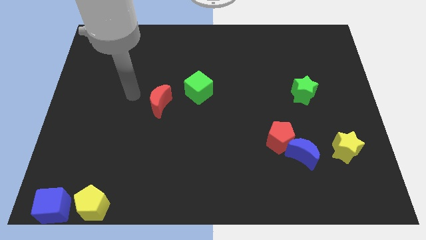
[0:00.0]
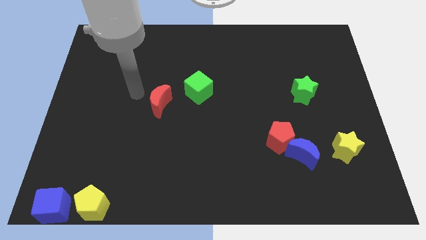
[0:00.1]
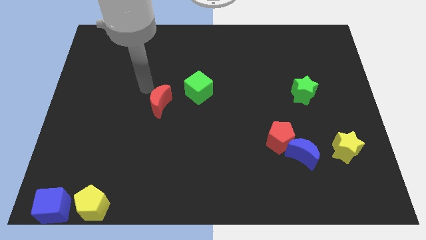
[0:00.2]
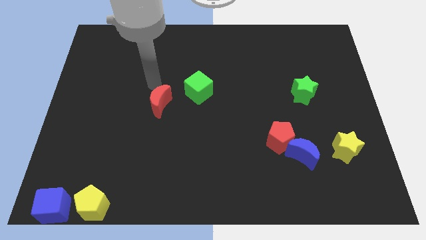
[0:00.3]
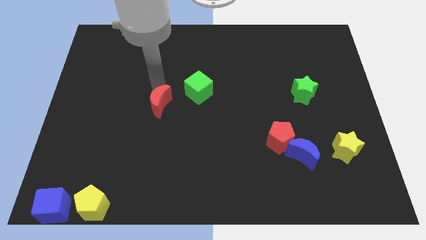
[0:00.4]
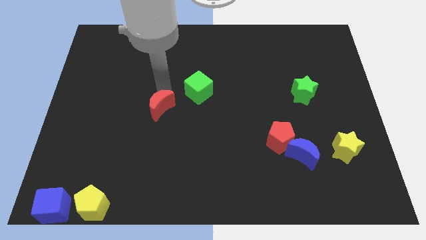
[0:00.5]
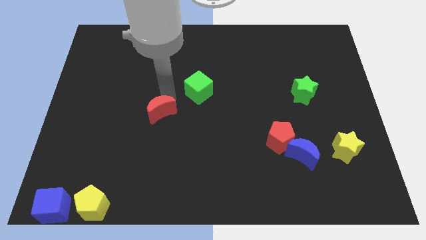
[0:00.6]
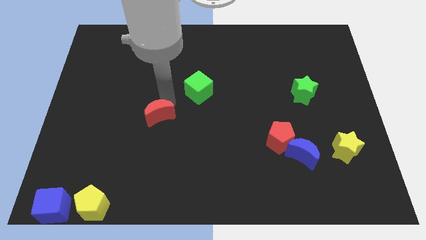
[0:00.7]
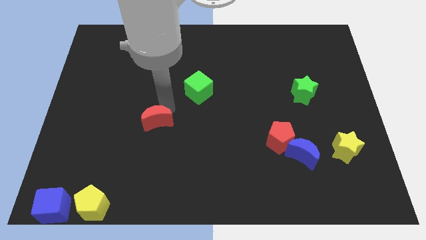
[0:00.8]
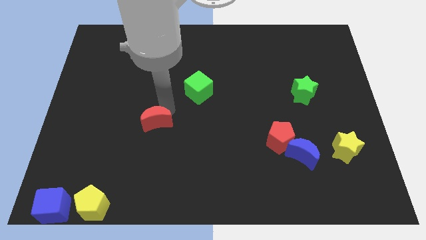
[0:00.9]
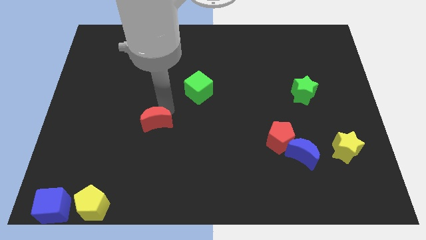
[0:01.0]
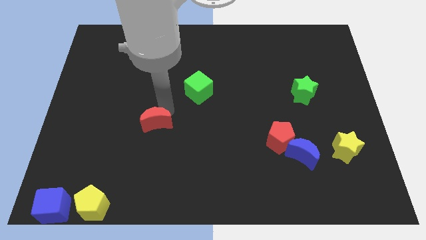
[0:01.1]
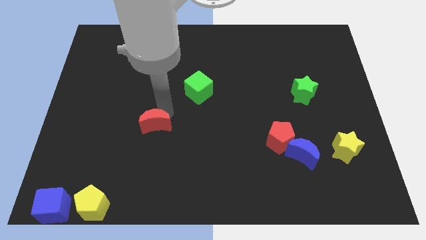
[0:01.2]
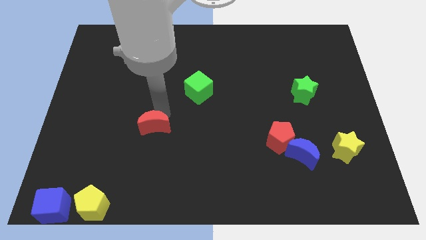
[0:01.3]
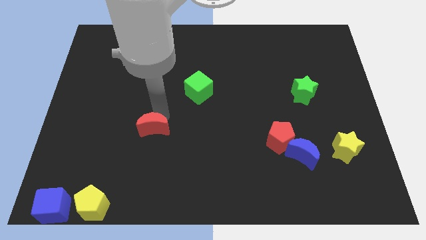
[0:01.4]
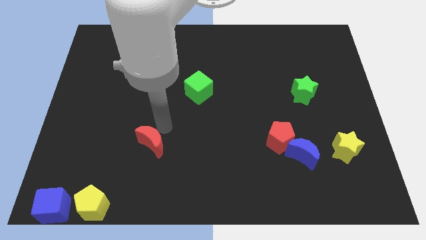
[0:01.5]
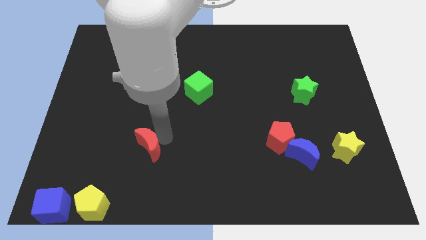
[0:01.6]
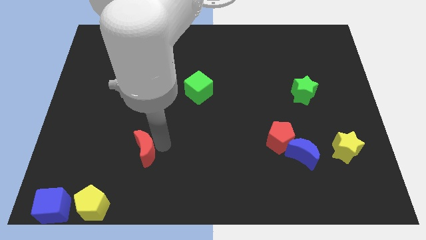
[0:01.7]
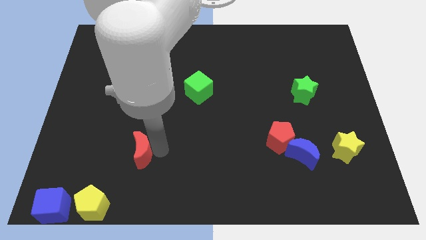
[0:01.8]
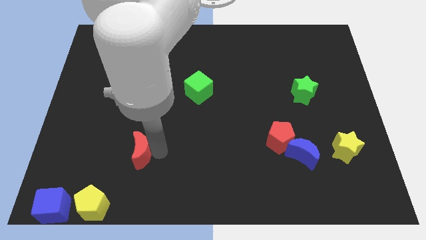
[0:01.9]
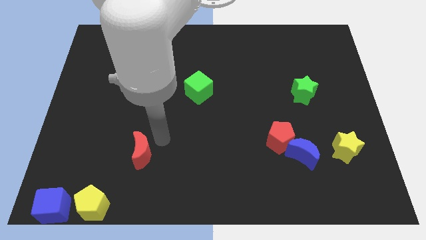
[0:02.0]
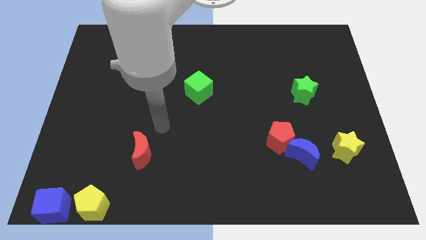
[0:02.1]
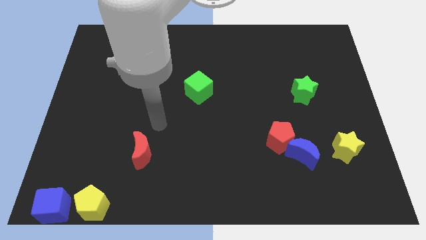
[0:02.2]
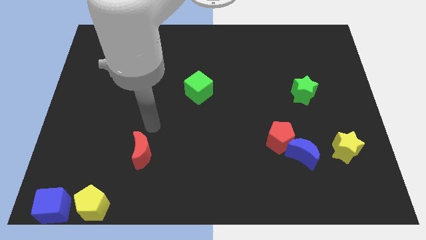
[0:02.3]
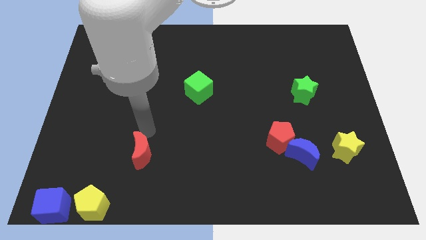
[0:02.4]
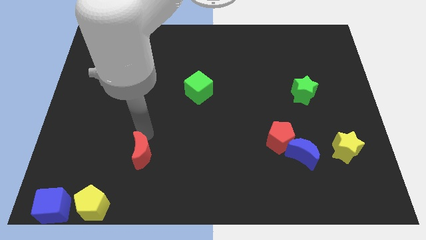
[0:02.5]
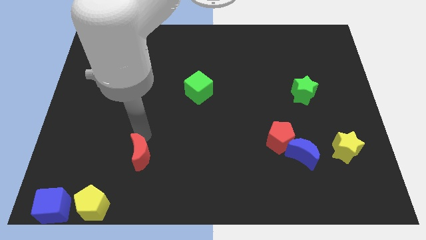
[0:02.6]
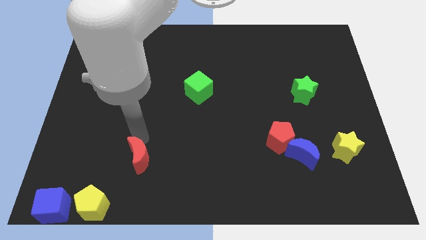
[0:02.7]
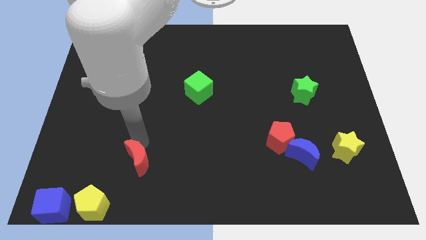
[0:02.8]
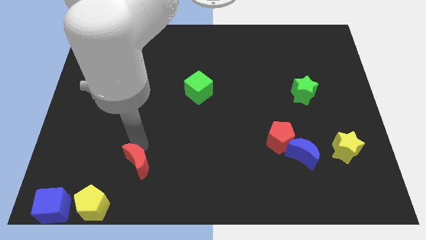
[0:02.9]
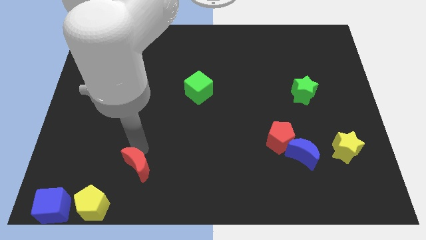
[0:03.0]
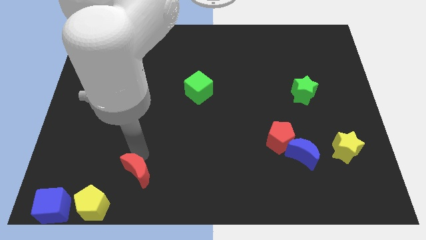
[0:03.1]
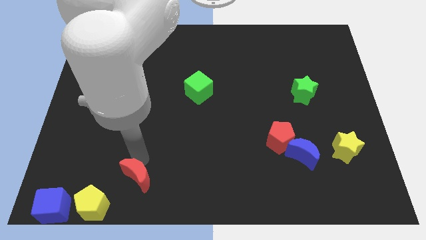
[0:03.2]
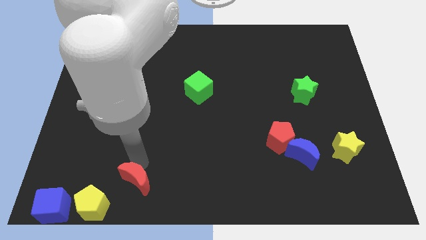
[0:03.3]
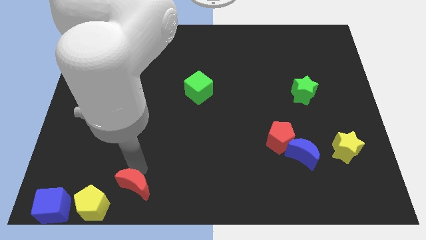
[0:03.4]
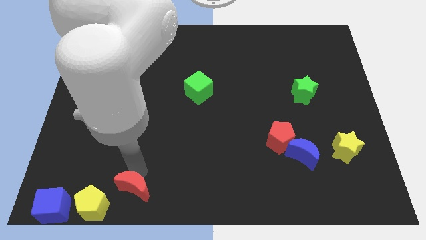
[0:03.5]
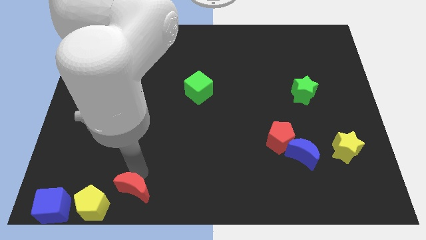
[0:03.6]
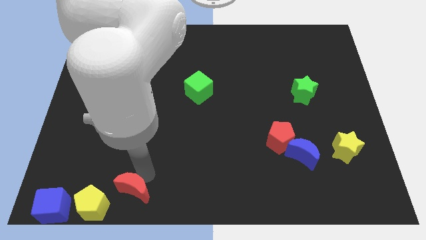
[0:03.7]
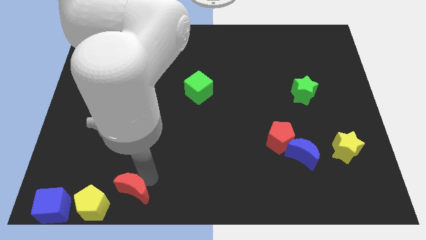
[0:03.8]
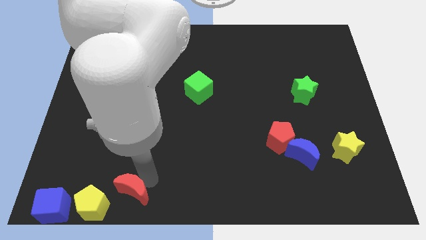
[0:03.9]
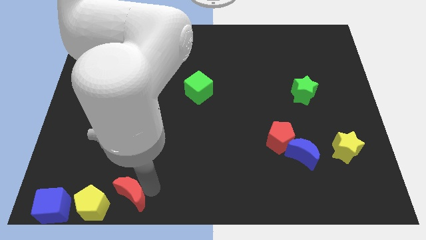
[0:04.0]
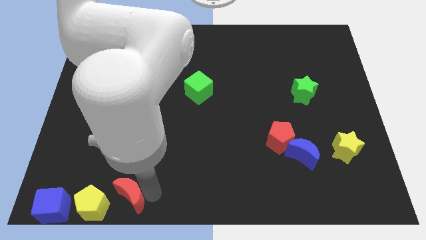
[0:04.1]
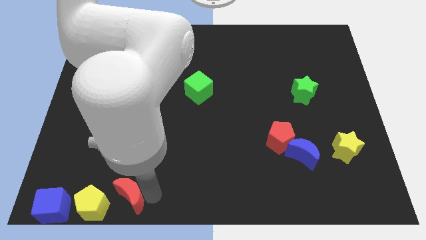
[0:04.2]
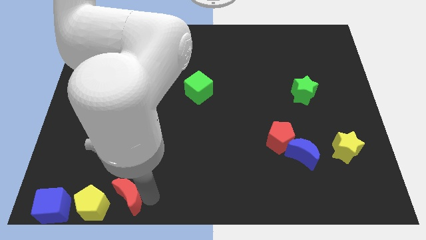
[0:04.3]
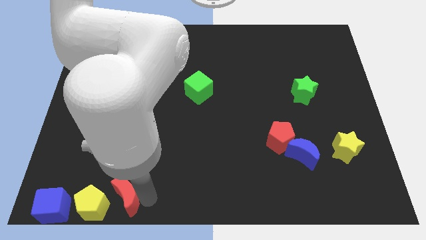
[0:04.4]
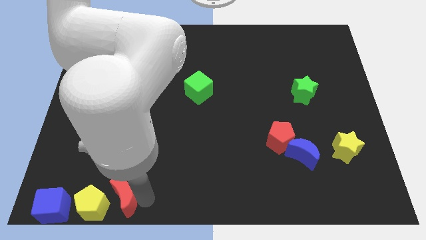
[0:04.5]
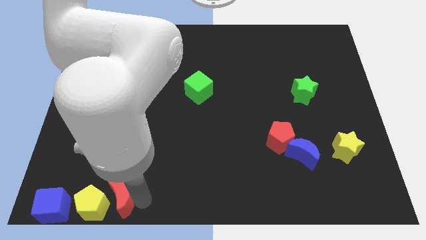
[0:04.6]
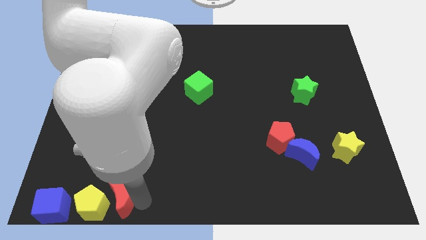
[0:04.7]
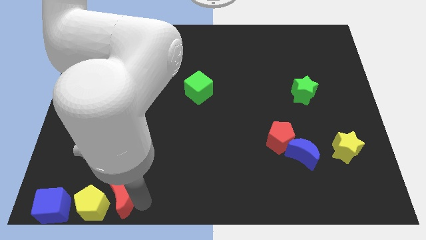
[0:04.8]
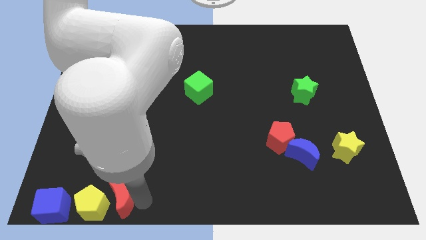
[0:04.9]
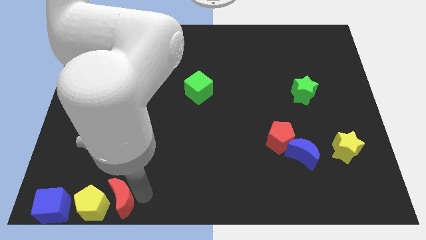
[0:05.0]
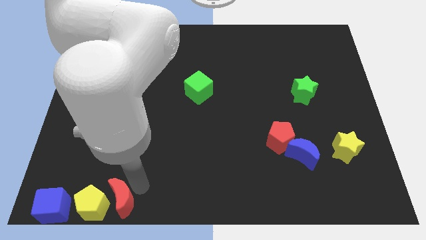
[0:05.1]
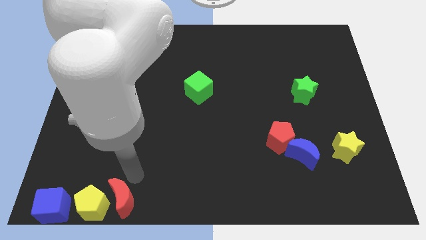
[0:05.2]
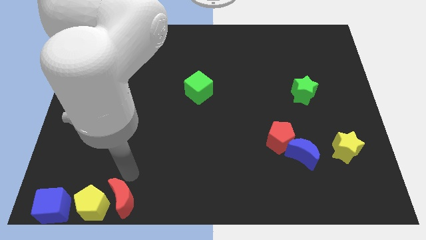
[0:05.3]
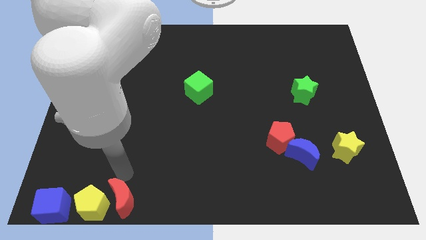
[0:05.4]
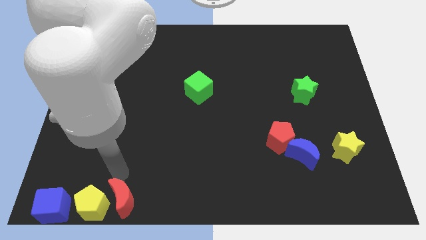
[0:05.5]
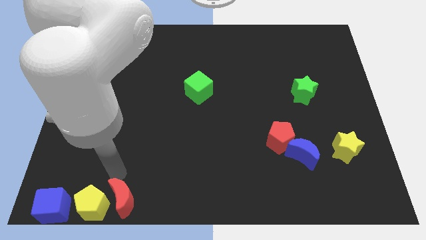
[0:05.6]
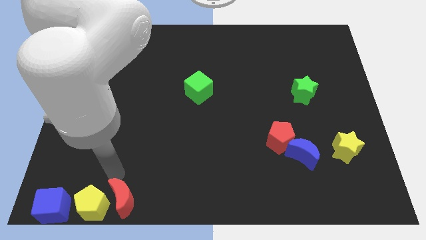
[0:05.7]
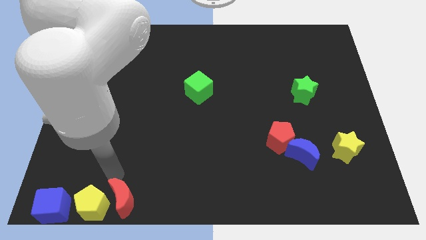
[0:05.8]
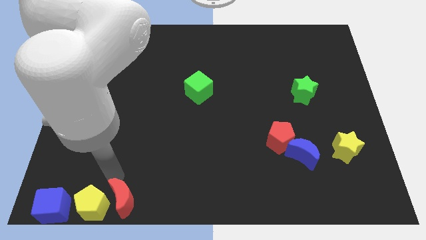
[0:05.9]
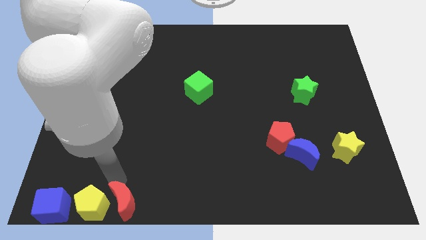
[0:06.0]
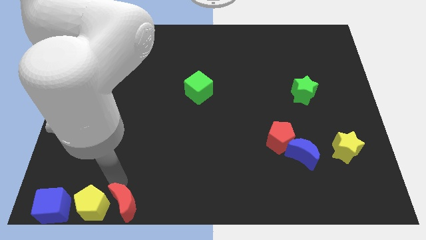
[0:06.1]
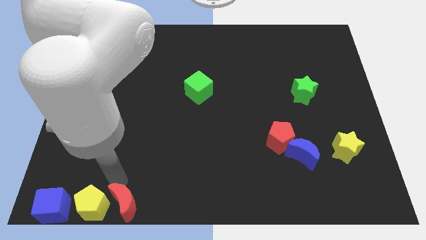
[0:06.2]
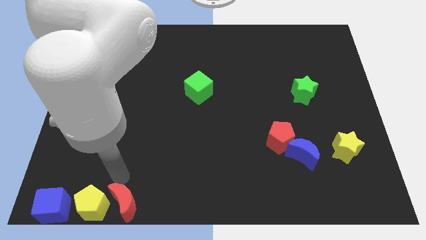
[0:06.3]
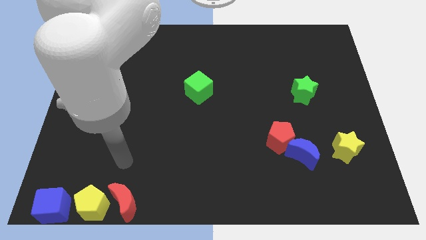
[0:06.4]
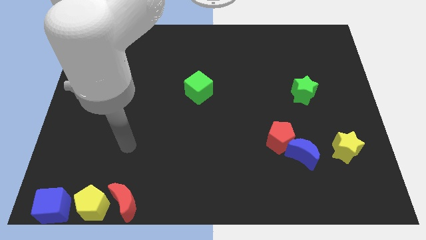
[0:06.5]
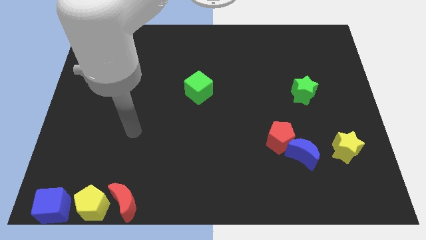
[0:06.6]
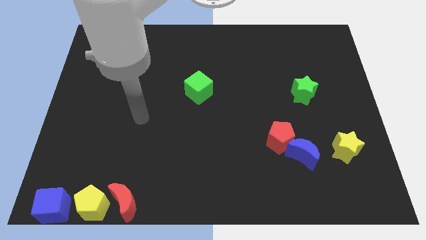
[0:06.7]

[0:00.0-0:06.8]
push the red crecent to the right side of the yellow pentagon

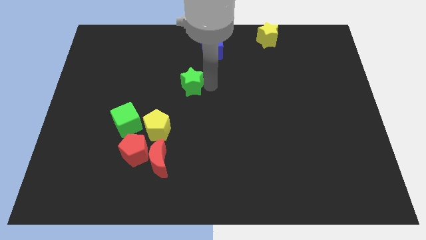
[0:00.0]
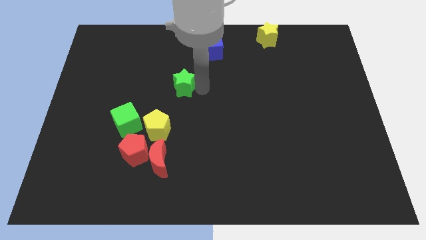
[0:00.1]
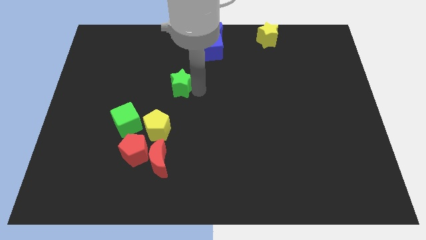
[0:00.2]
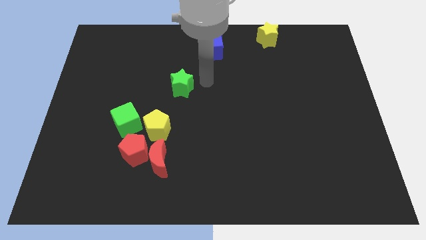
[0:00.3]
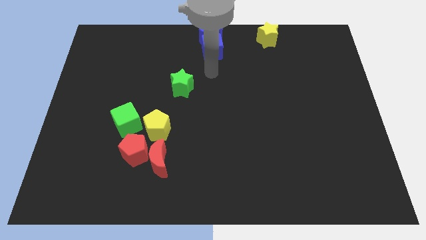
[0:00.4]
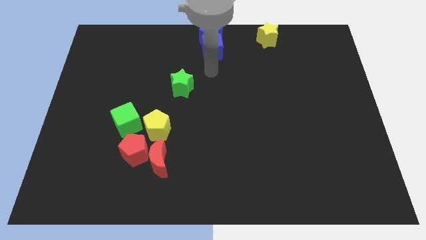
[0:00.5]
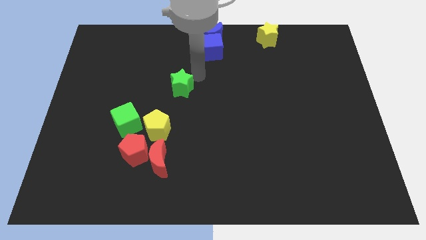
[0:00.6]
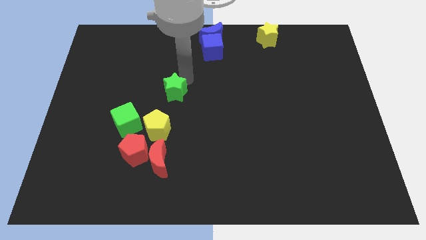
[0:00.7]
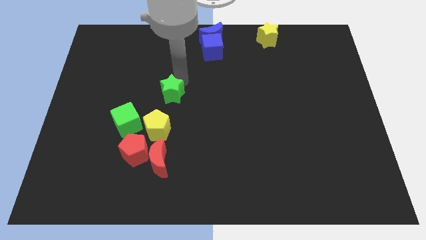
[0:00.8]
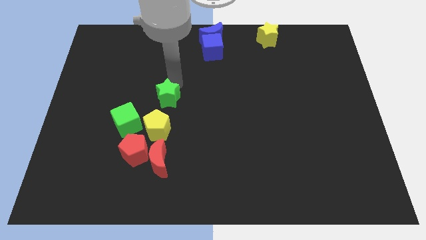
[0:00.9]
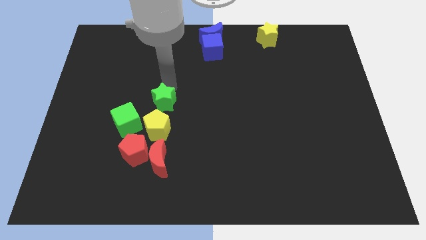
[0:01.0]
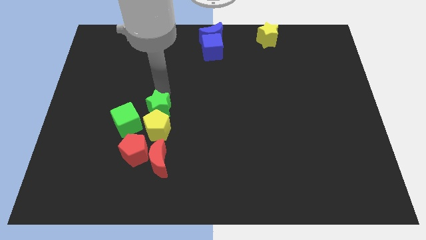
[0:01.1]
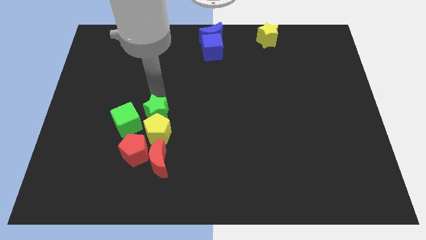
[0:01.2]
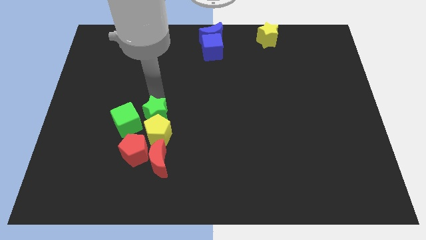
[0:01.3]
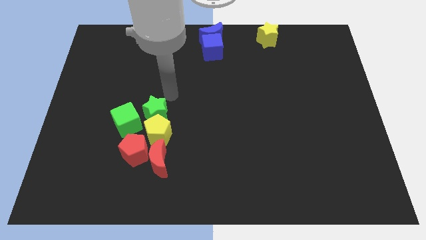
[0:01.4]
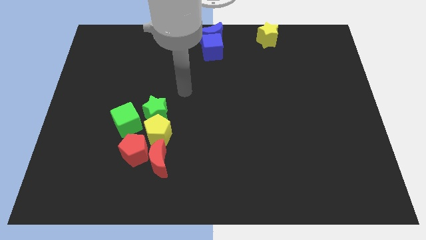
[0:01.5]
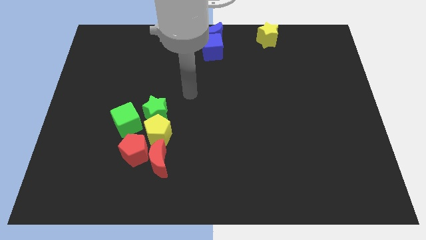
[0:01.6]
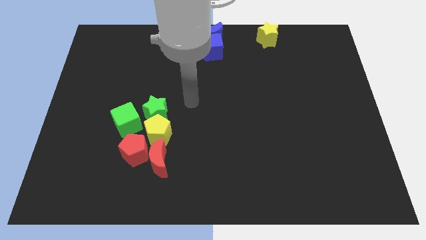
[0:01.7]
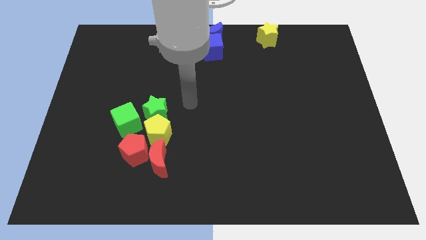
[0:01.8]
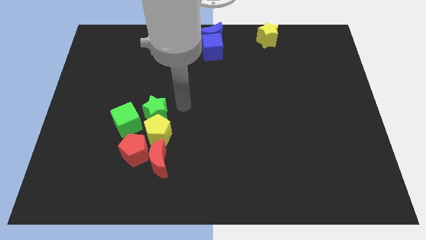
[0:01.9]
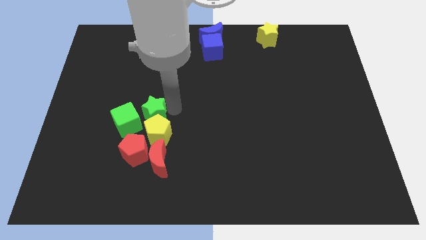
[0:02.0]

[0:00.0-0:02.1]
push the green star into the yellow pentagon

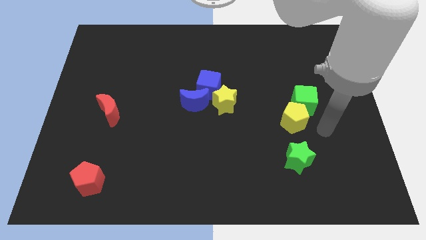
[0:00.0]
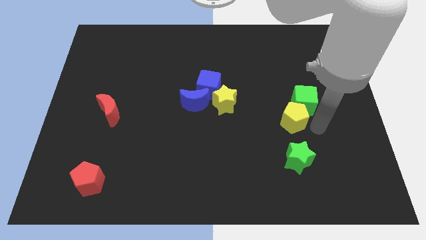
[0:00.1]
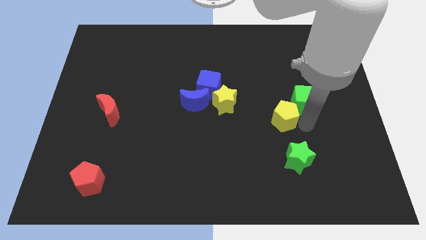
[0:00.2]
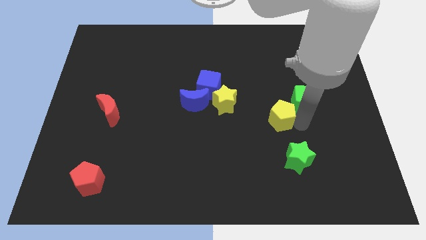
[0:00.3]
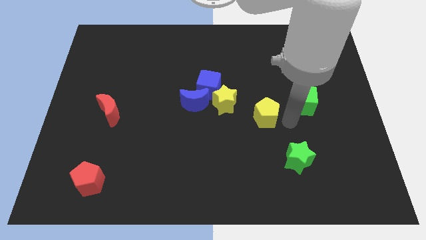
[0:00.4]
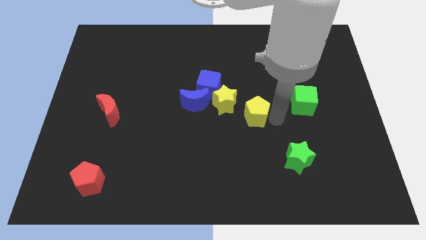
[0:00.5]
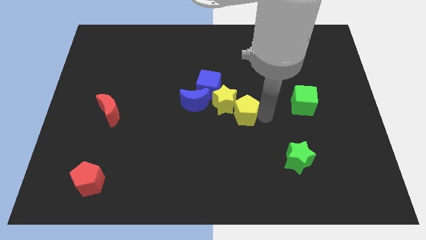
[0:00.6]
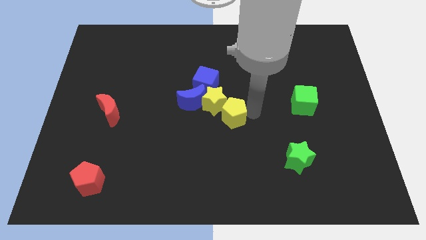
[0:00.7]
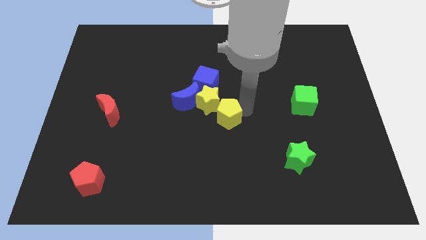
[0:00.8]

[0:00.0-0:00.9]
push yellow pentagon towards yellow star
